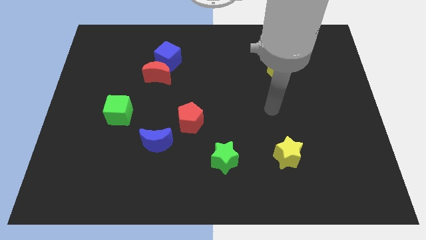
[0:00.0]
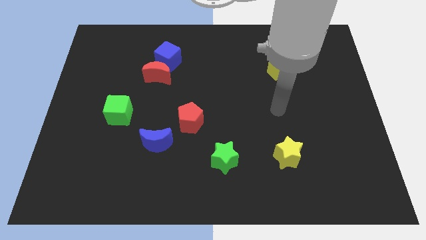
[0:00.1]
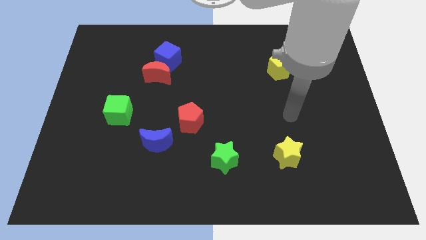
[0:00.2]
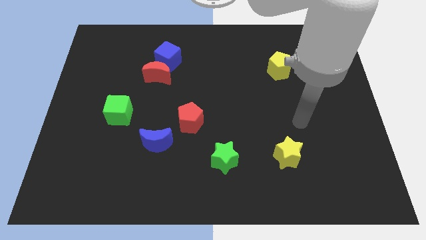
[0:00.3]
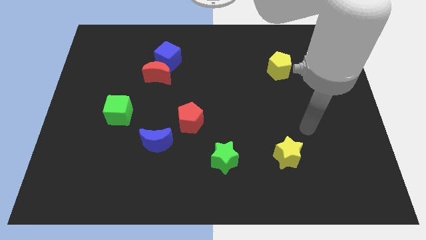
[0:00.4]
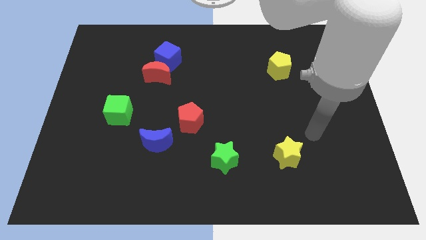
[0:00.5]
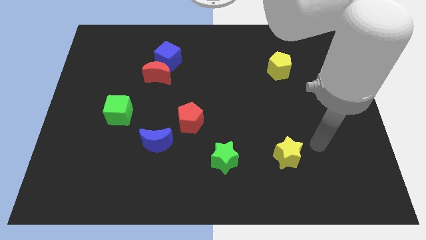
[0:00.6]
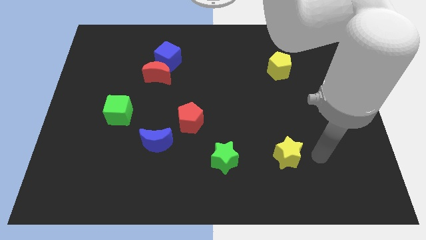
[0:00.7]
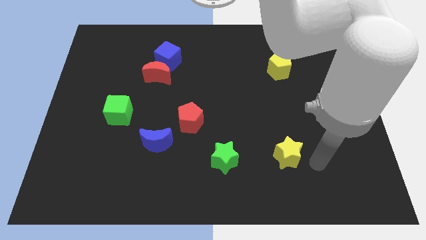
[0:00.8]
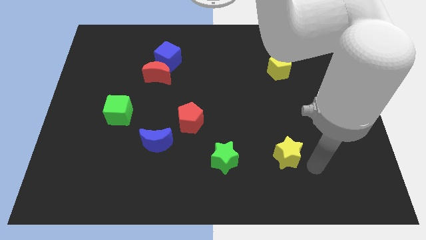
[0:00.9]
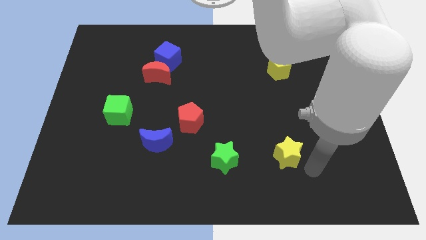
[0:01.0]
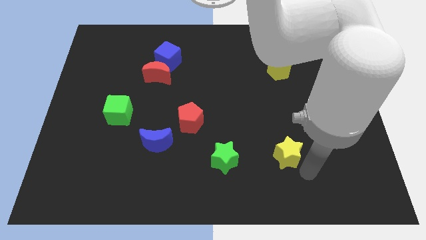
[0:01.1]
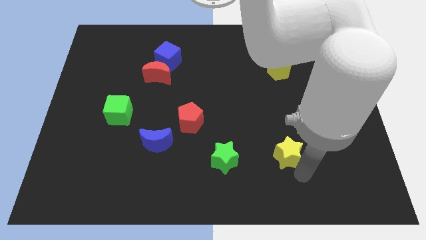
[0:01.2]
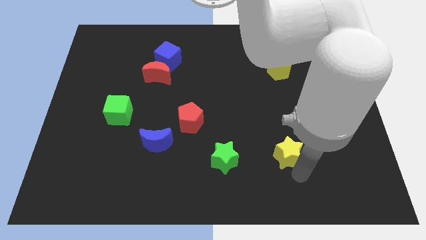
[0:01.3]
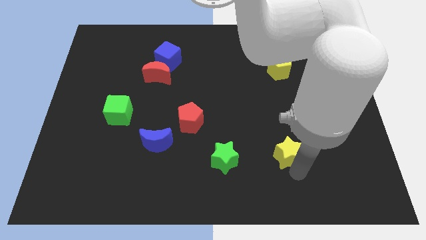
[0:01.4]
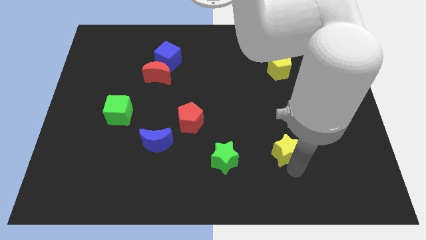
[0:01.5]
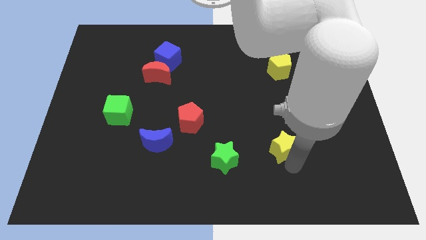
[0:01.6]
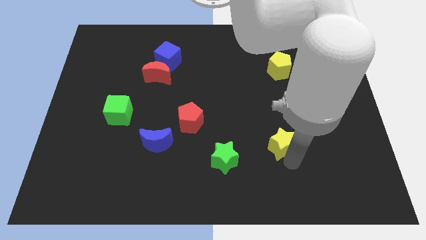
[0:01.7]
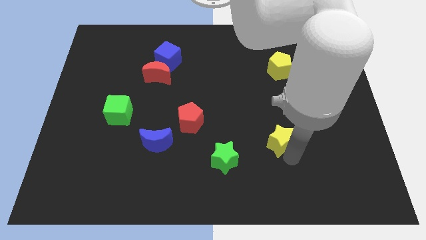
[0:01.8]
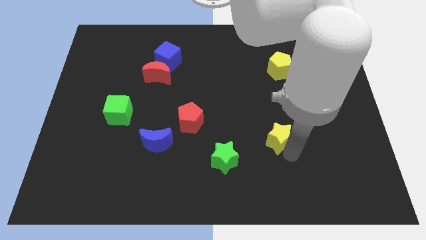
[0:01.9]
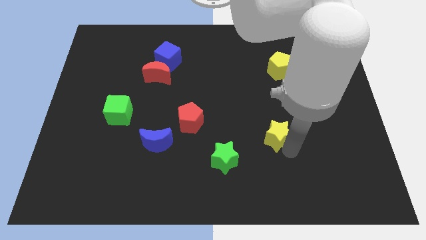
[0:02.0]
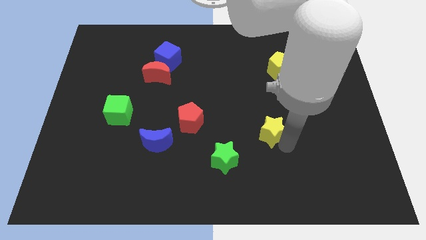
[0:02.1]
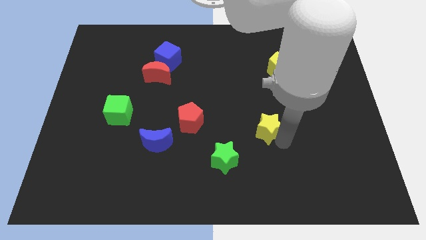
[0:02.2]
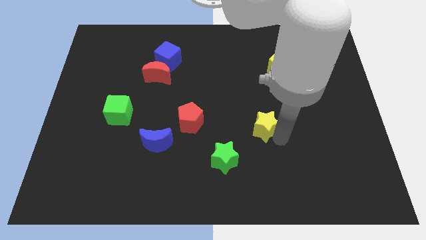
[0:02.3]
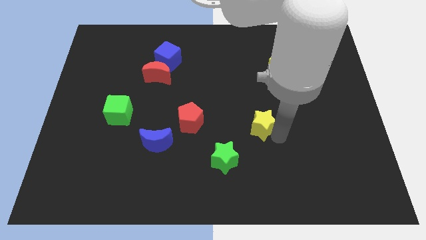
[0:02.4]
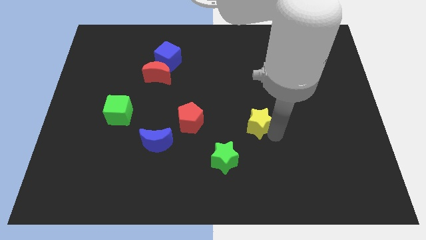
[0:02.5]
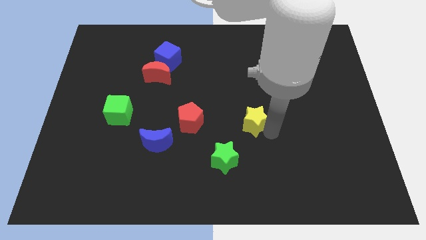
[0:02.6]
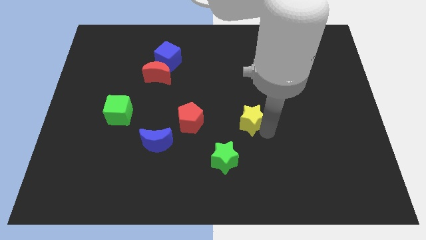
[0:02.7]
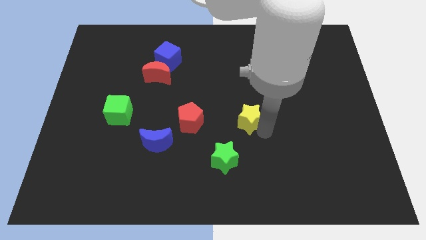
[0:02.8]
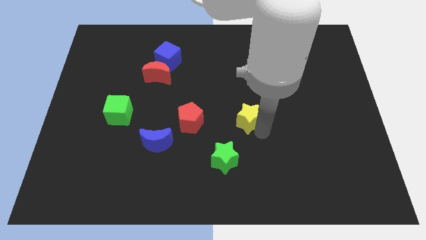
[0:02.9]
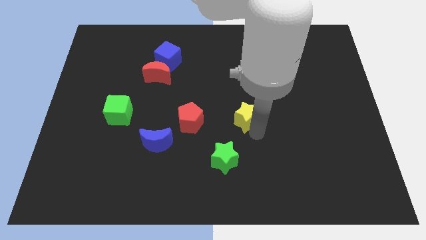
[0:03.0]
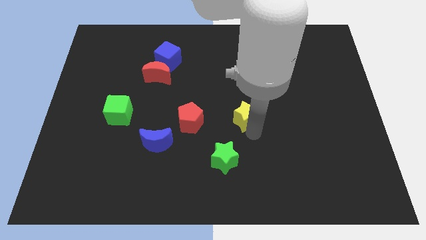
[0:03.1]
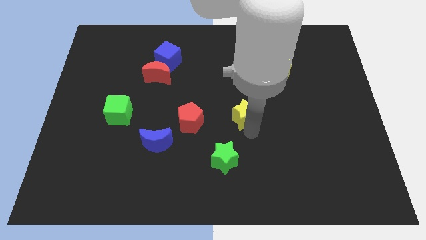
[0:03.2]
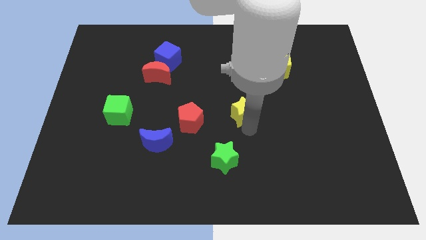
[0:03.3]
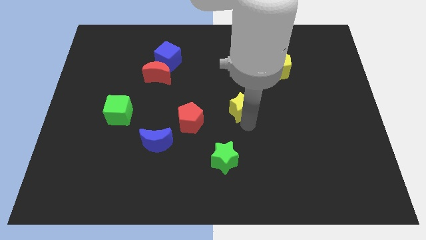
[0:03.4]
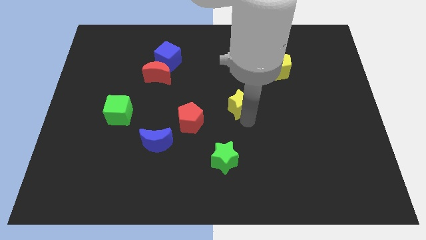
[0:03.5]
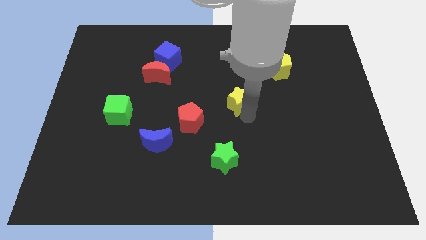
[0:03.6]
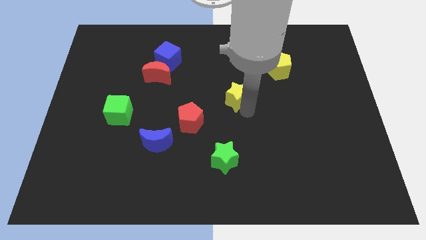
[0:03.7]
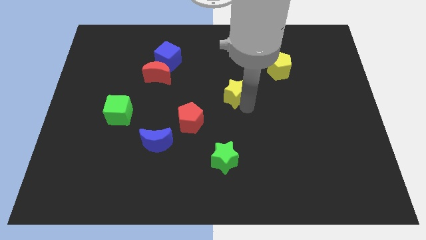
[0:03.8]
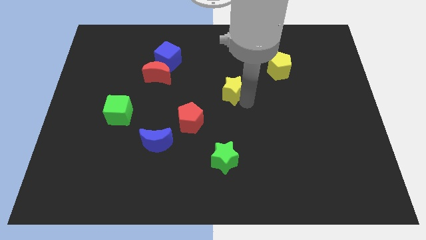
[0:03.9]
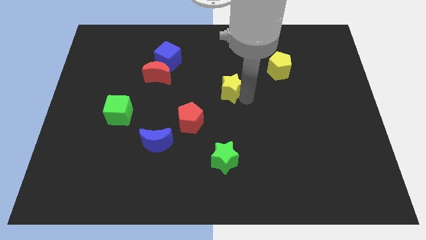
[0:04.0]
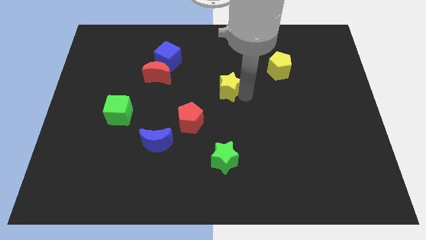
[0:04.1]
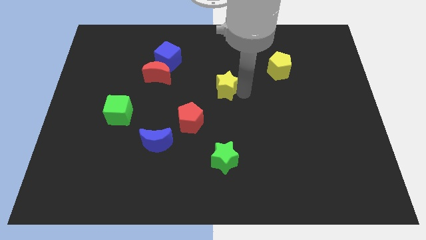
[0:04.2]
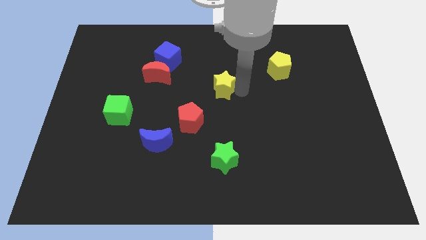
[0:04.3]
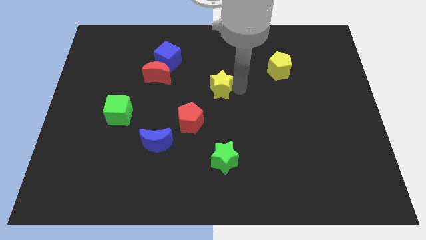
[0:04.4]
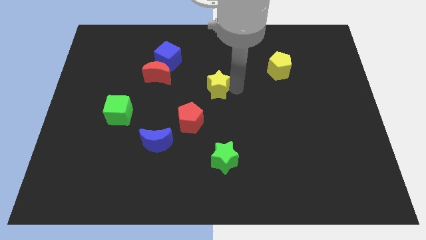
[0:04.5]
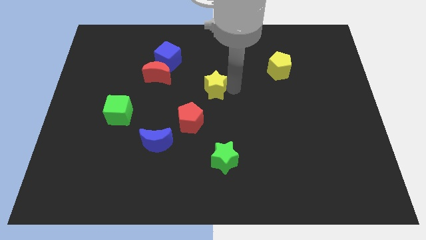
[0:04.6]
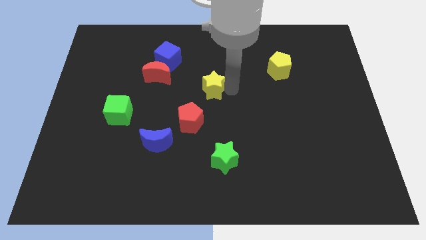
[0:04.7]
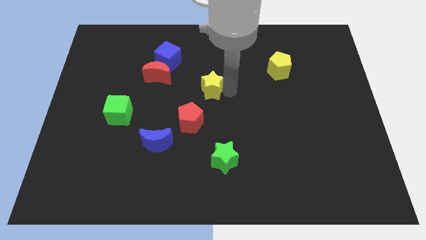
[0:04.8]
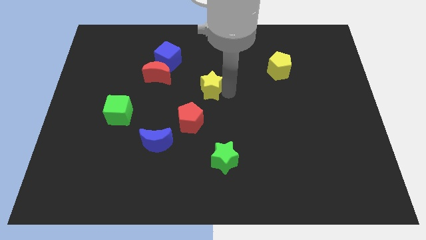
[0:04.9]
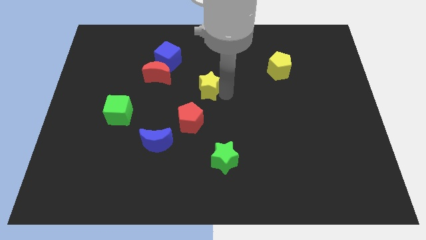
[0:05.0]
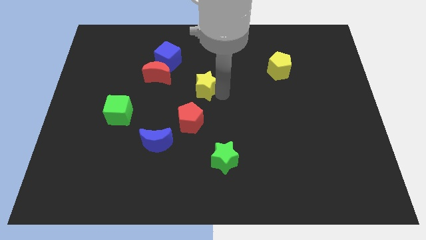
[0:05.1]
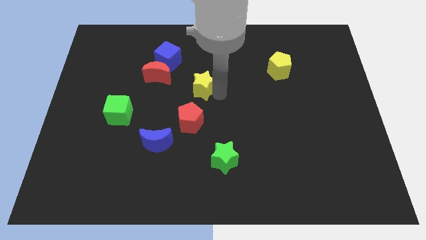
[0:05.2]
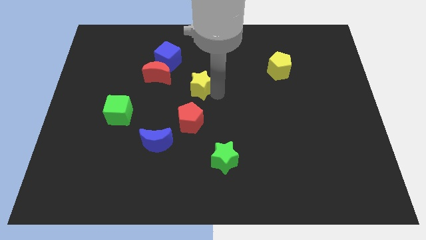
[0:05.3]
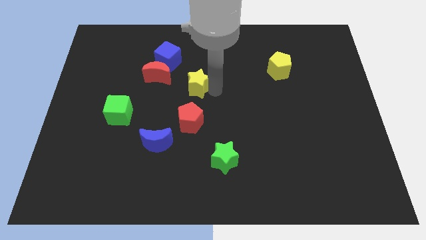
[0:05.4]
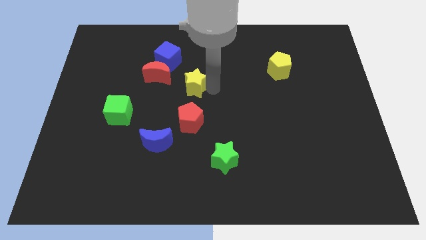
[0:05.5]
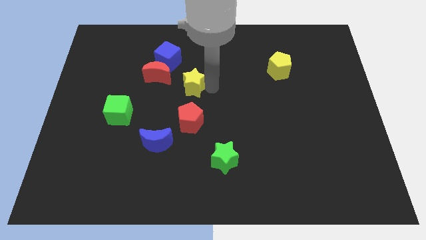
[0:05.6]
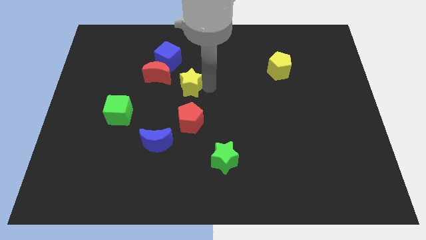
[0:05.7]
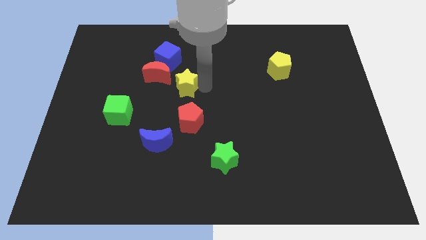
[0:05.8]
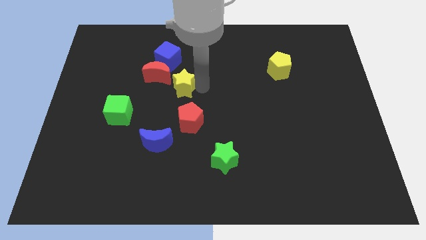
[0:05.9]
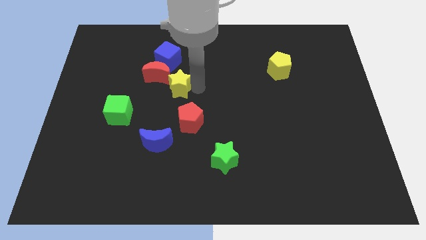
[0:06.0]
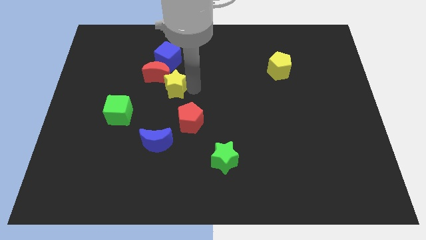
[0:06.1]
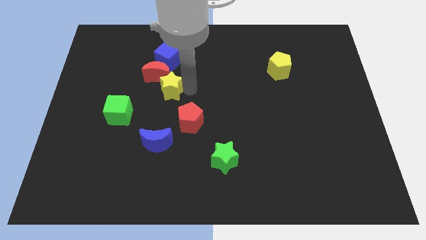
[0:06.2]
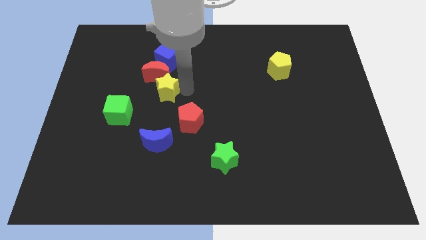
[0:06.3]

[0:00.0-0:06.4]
move the yellow star to the red moon

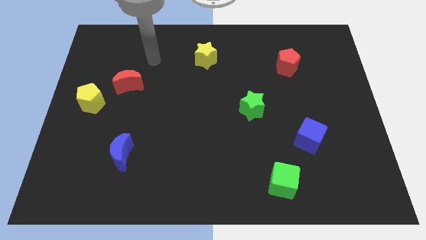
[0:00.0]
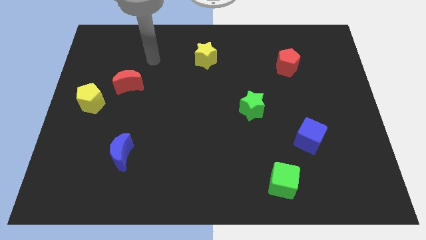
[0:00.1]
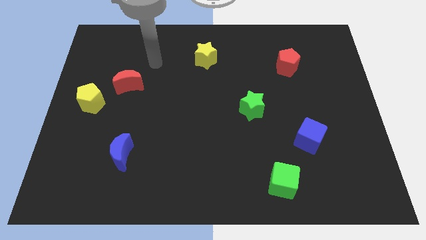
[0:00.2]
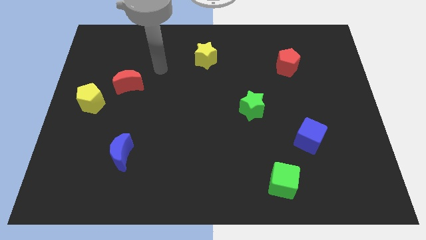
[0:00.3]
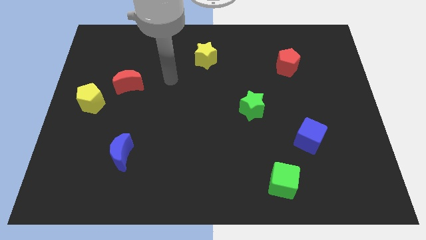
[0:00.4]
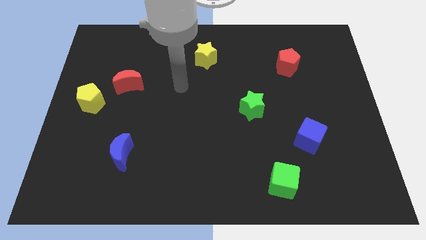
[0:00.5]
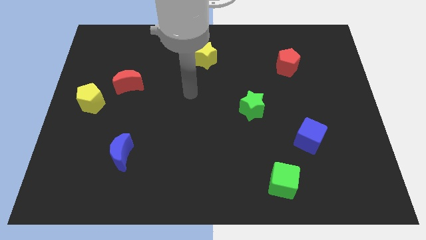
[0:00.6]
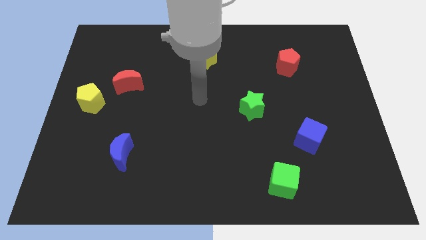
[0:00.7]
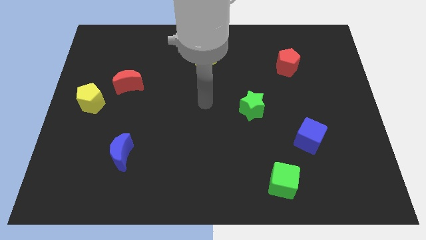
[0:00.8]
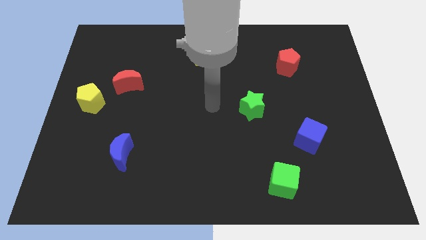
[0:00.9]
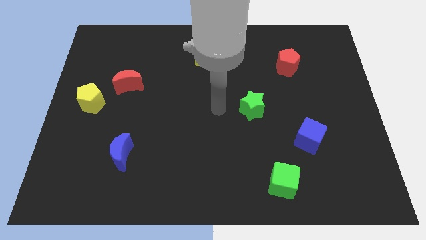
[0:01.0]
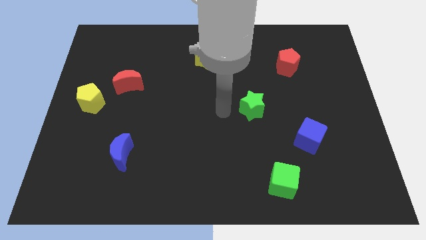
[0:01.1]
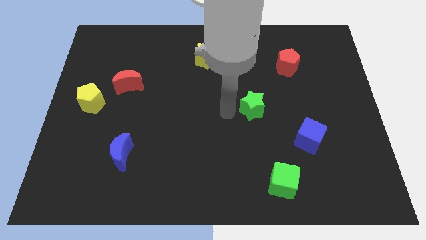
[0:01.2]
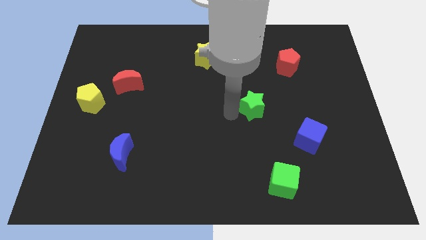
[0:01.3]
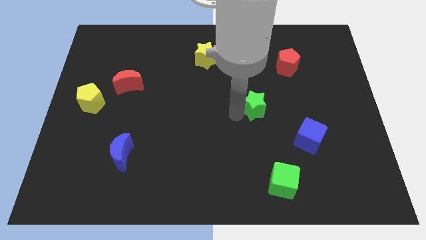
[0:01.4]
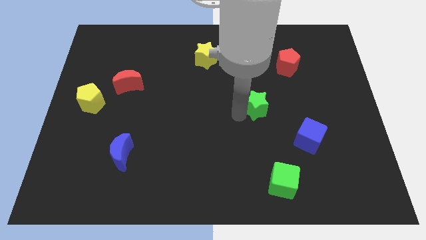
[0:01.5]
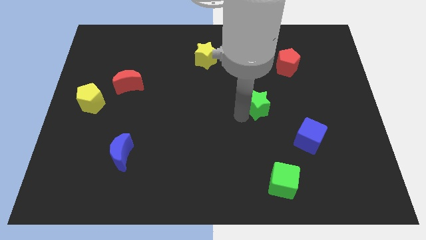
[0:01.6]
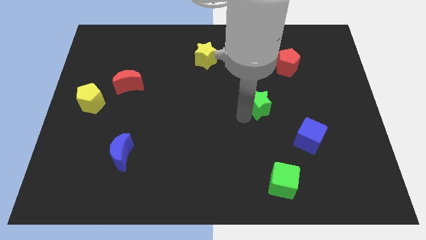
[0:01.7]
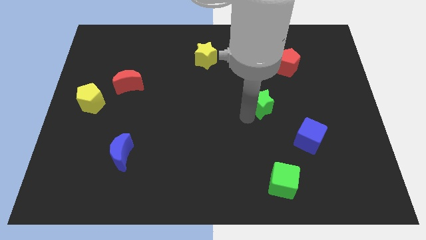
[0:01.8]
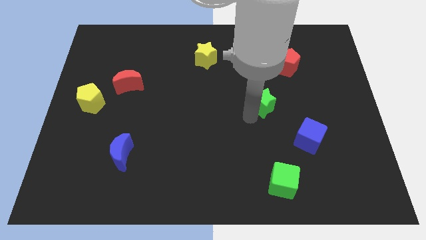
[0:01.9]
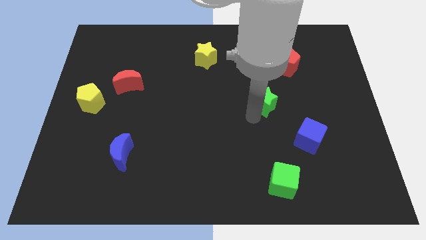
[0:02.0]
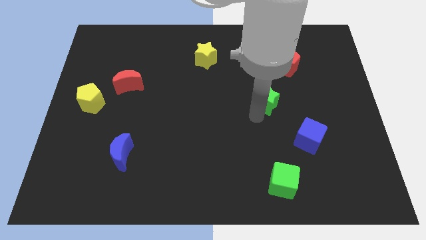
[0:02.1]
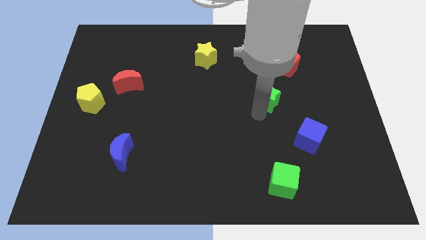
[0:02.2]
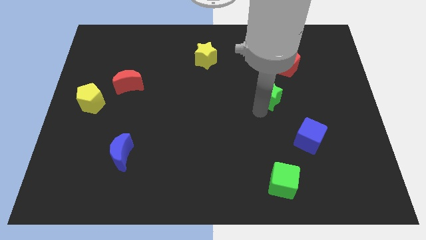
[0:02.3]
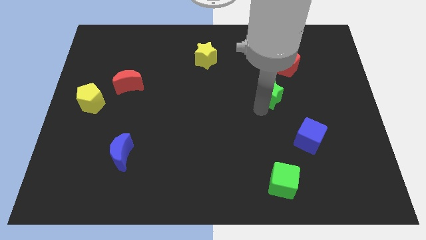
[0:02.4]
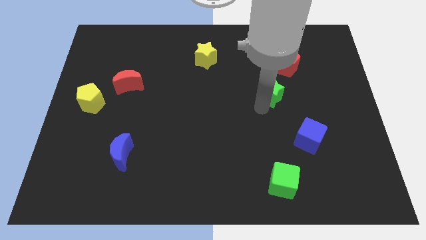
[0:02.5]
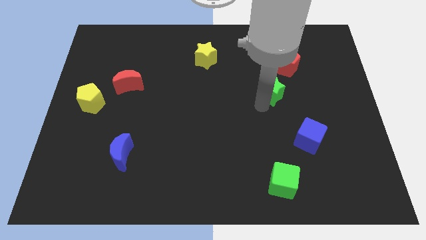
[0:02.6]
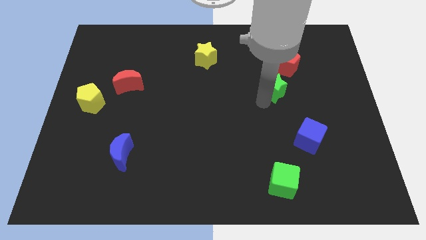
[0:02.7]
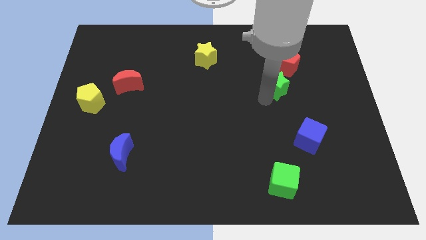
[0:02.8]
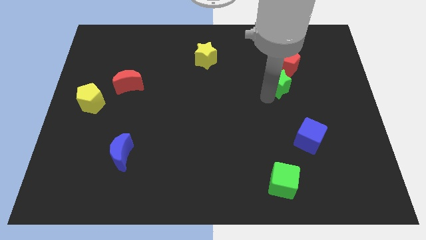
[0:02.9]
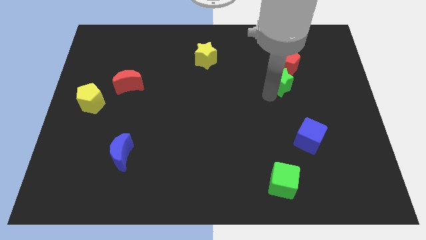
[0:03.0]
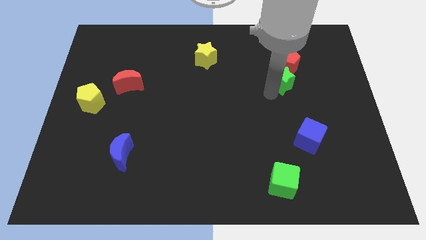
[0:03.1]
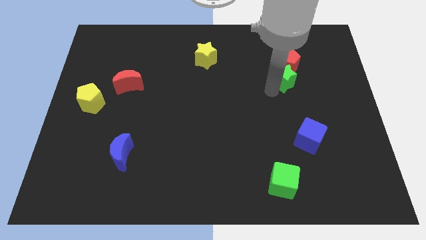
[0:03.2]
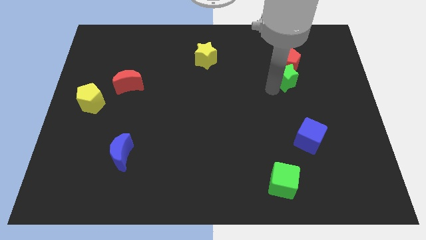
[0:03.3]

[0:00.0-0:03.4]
move the green star to the red pentagon
